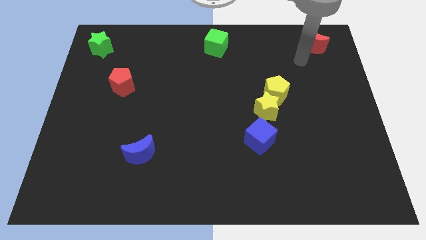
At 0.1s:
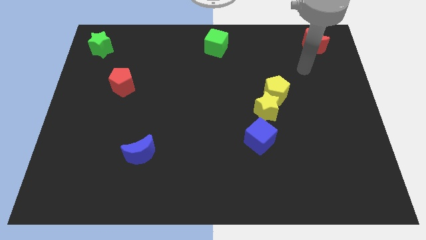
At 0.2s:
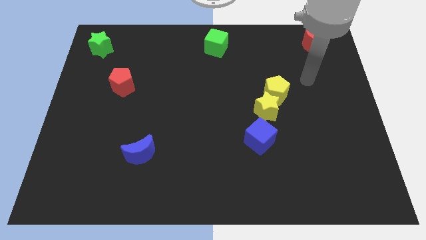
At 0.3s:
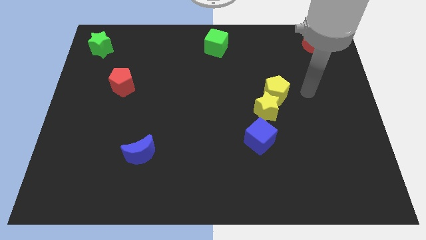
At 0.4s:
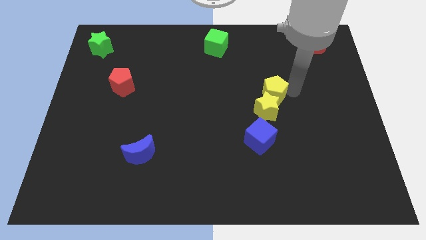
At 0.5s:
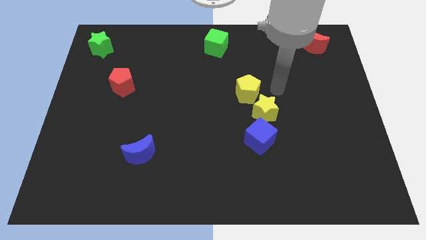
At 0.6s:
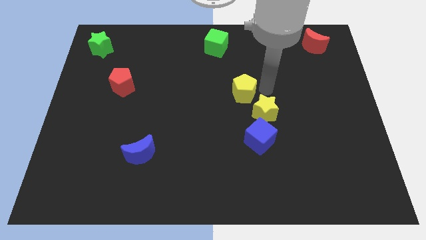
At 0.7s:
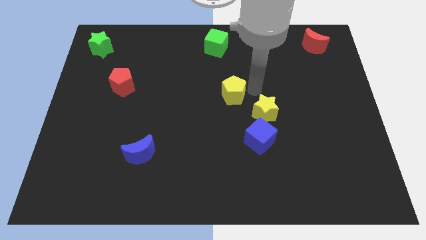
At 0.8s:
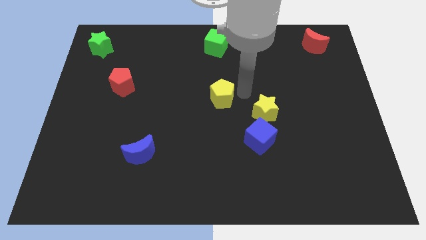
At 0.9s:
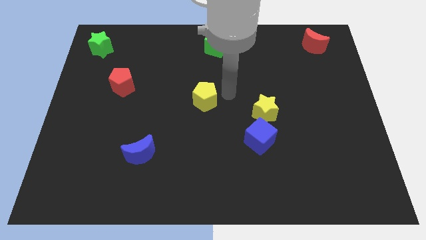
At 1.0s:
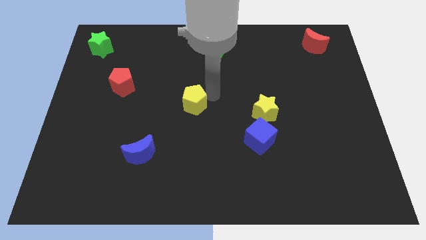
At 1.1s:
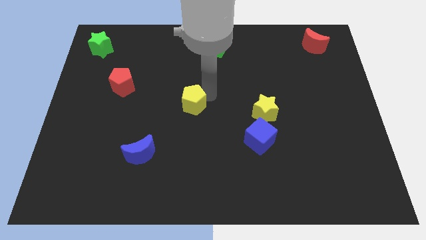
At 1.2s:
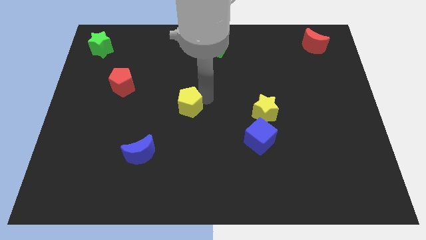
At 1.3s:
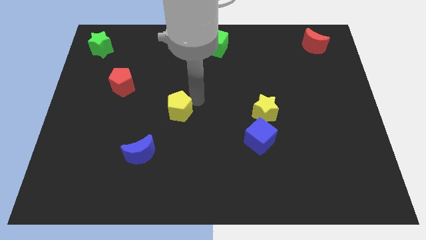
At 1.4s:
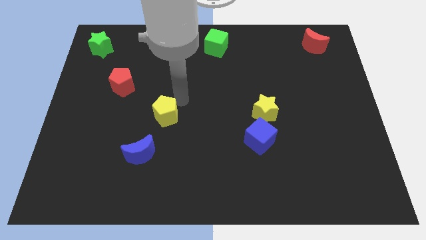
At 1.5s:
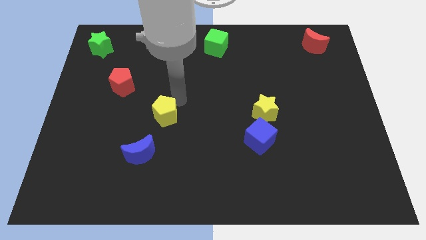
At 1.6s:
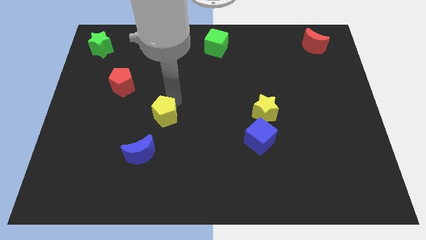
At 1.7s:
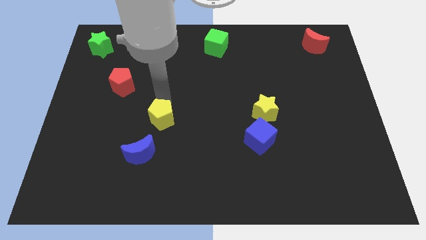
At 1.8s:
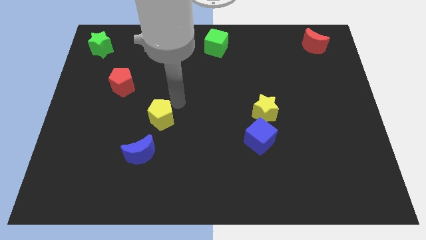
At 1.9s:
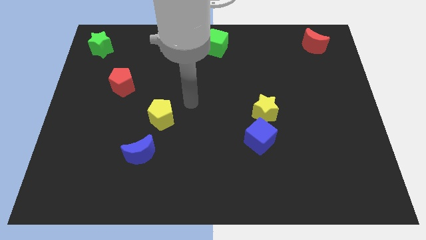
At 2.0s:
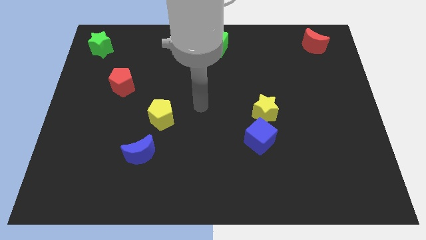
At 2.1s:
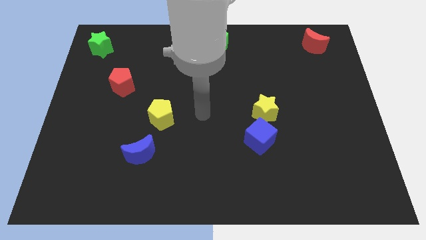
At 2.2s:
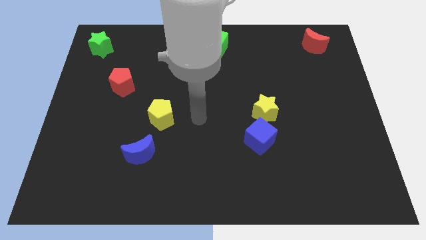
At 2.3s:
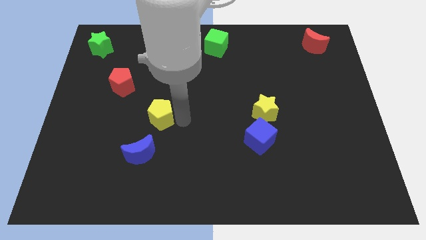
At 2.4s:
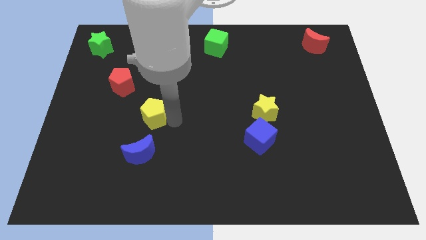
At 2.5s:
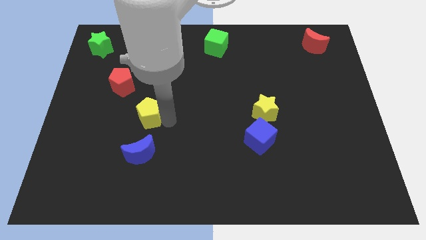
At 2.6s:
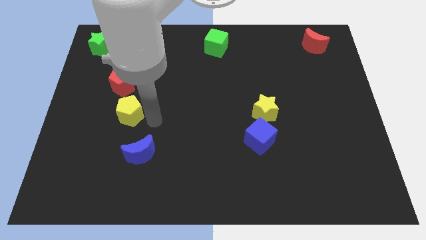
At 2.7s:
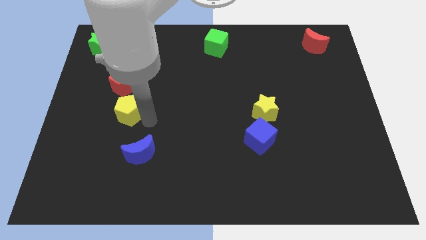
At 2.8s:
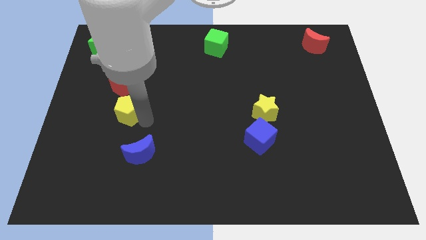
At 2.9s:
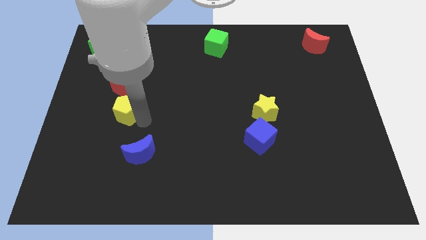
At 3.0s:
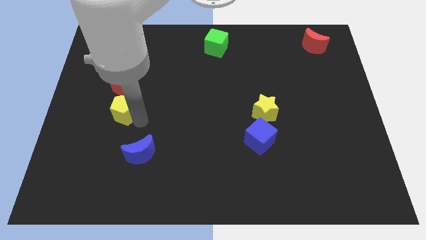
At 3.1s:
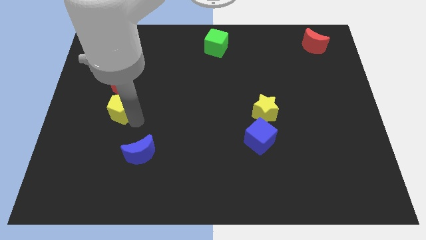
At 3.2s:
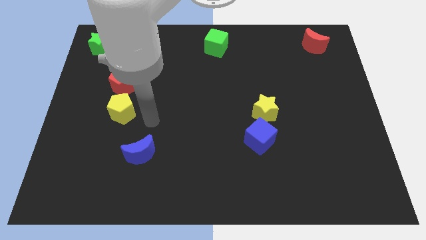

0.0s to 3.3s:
place the yellow pentagon at the bottom of red pentagon

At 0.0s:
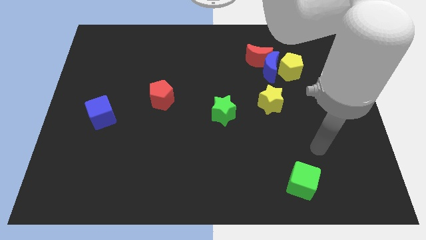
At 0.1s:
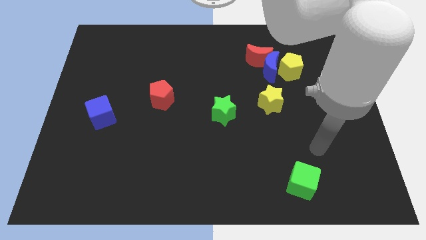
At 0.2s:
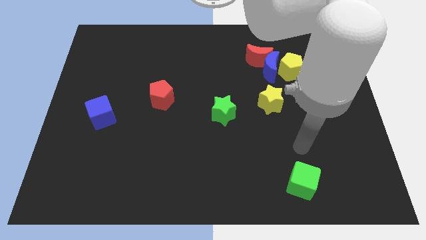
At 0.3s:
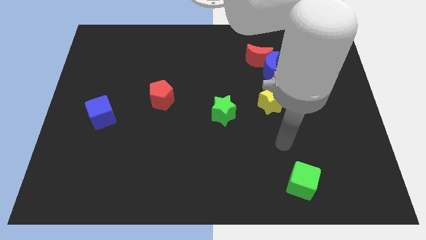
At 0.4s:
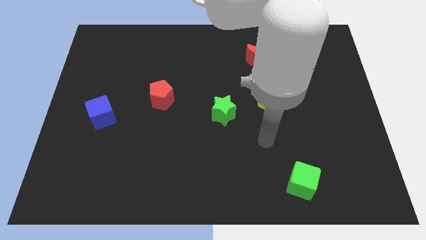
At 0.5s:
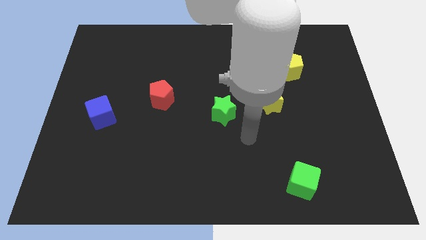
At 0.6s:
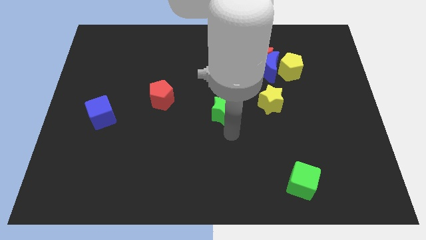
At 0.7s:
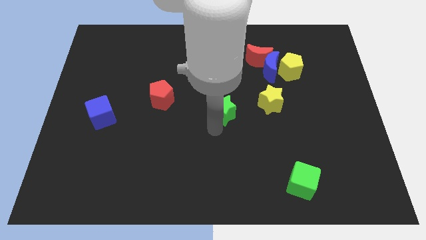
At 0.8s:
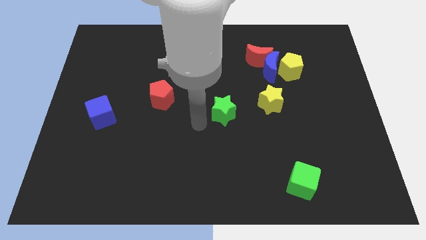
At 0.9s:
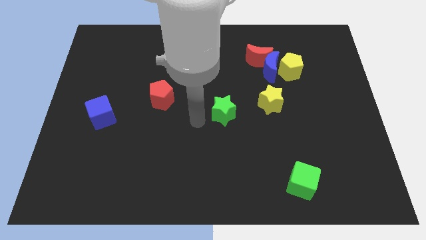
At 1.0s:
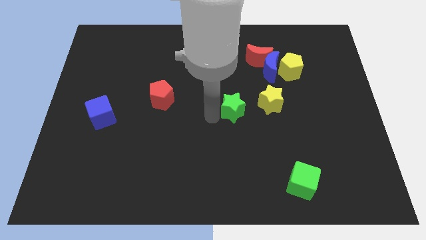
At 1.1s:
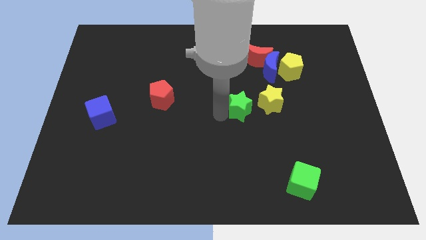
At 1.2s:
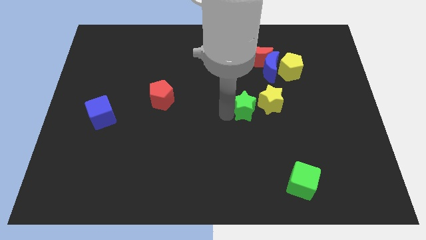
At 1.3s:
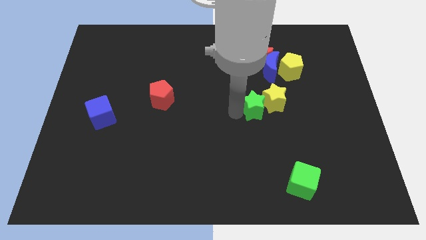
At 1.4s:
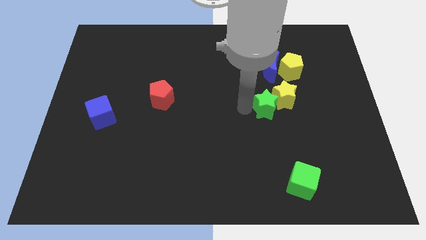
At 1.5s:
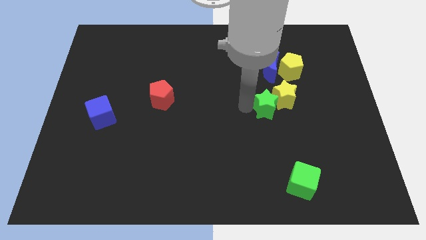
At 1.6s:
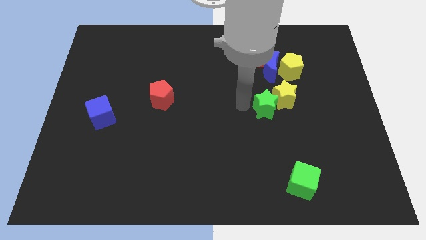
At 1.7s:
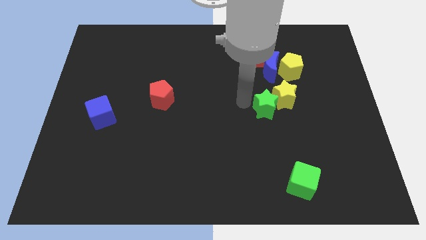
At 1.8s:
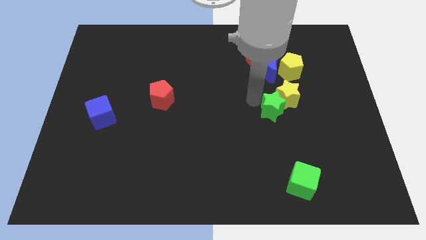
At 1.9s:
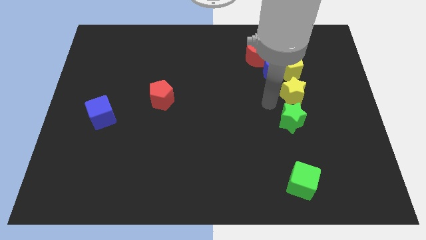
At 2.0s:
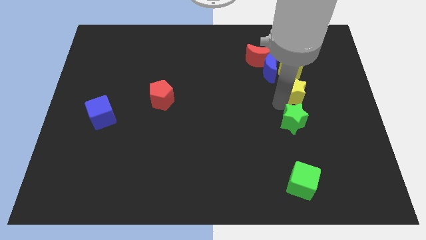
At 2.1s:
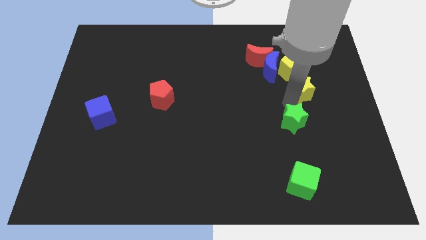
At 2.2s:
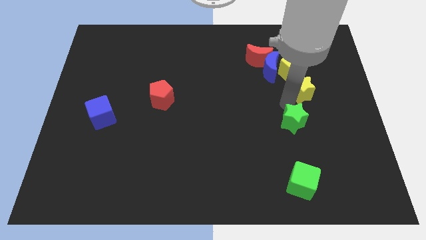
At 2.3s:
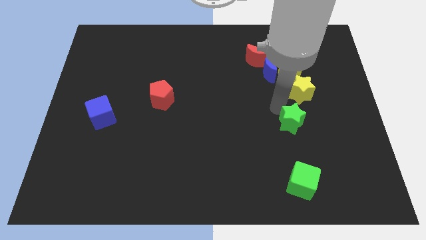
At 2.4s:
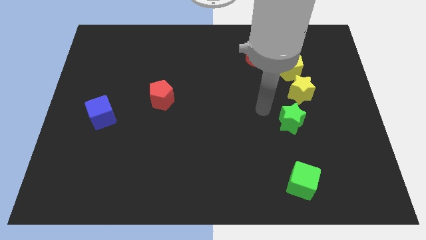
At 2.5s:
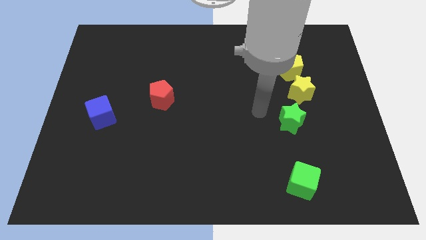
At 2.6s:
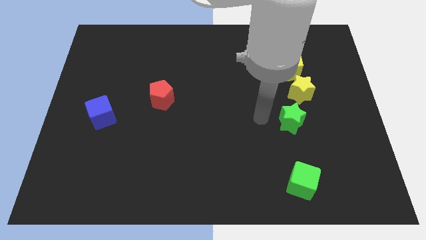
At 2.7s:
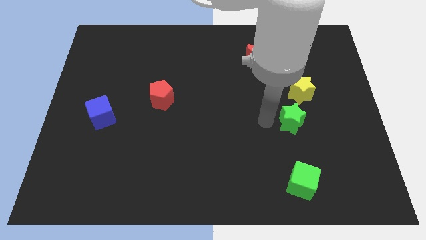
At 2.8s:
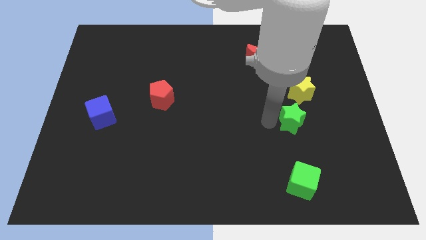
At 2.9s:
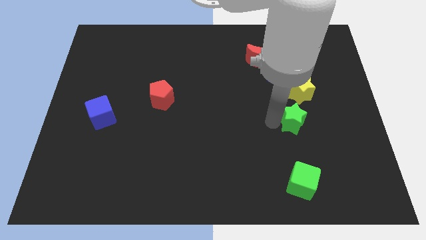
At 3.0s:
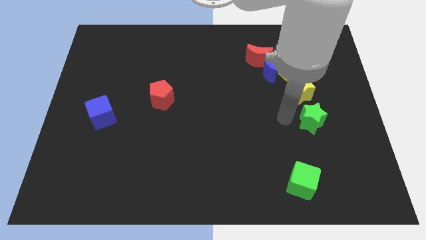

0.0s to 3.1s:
place the green star below the yellow star

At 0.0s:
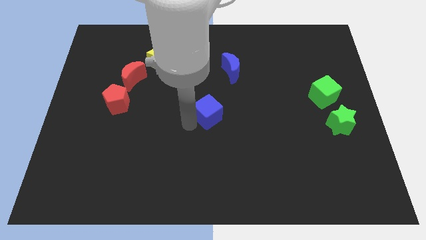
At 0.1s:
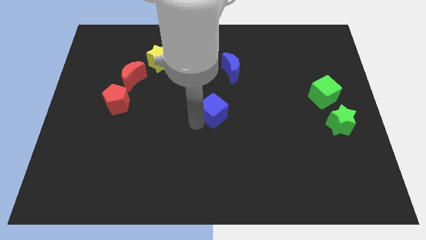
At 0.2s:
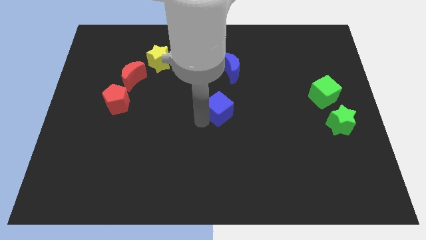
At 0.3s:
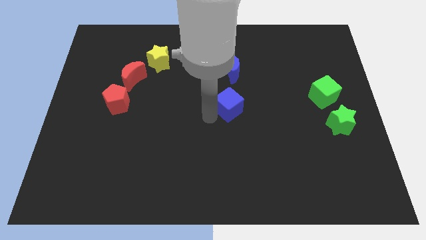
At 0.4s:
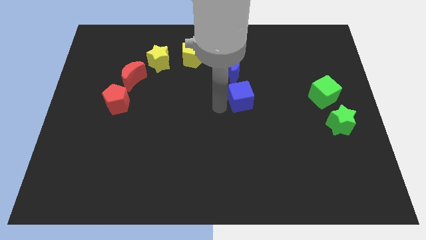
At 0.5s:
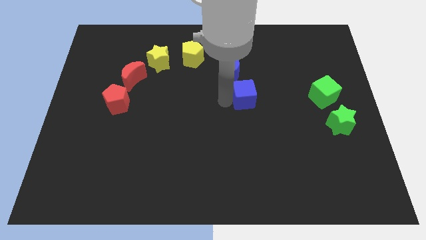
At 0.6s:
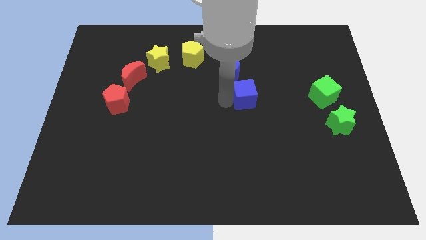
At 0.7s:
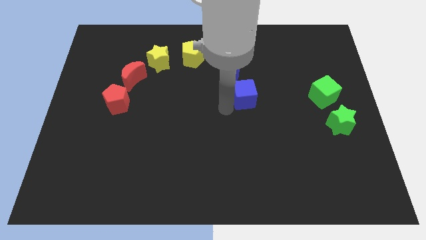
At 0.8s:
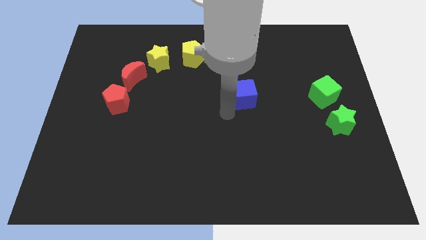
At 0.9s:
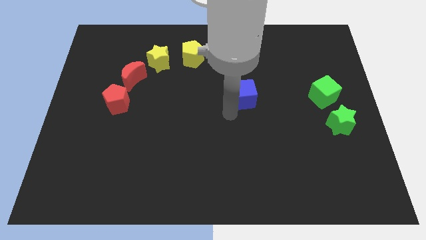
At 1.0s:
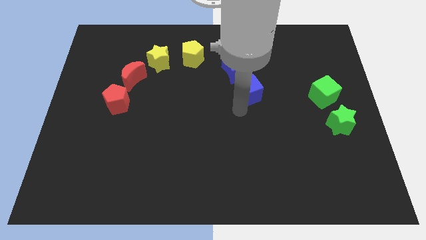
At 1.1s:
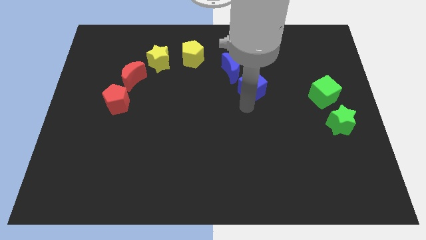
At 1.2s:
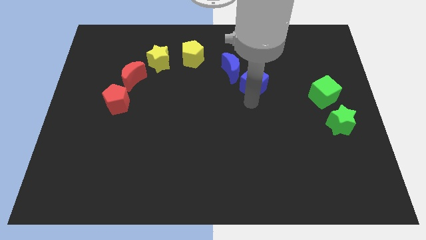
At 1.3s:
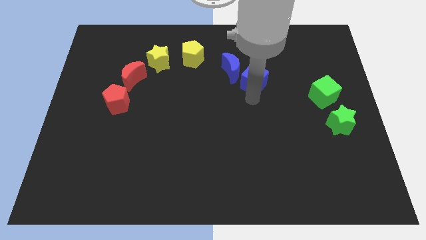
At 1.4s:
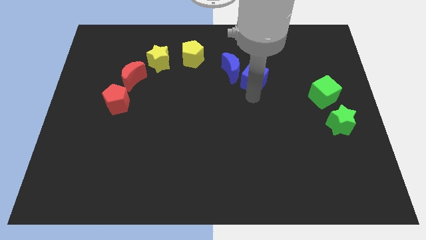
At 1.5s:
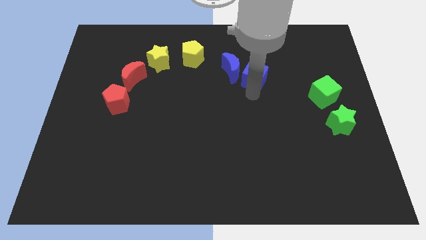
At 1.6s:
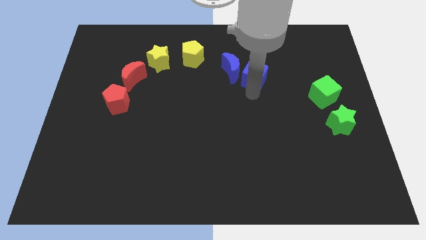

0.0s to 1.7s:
place the blue cube right to the blue crescent

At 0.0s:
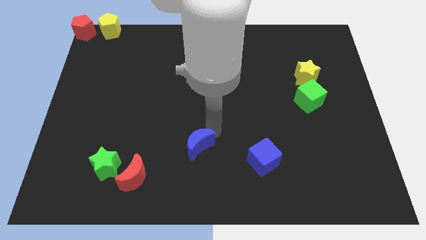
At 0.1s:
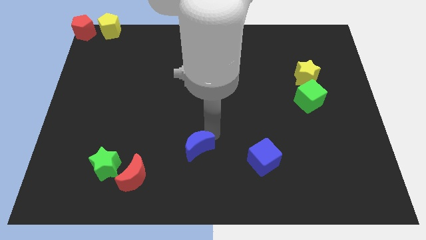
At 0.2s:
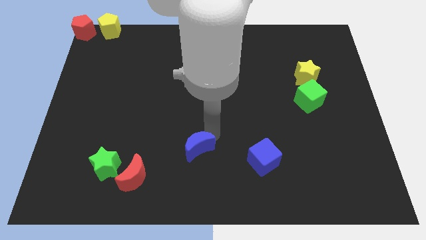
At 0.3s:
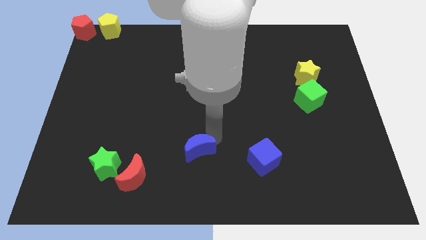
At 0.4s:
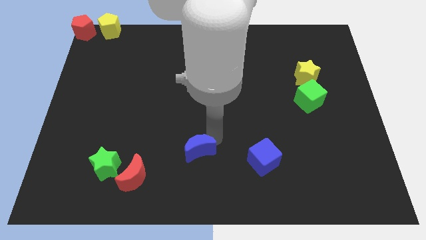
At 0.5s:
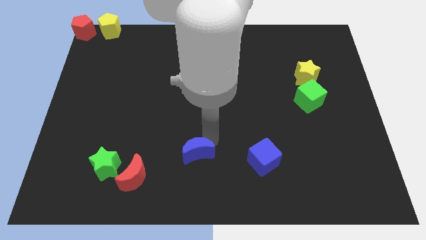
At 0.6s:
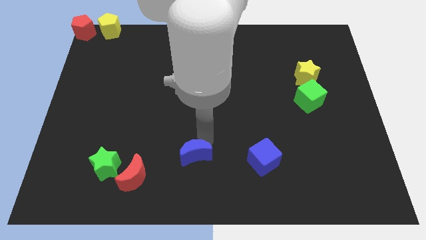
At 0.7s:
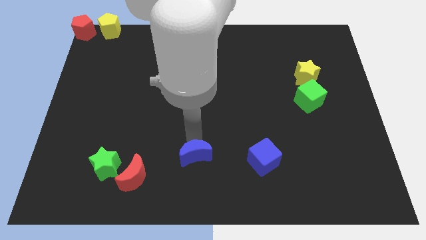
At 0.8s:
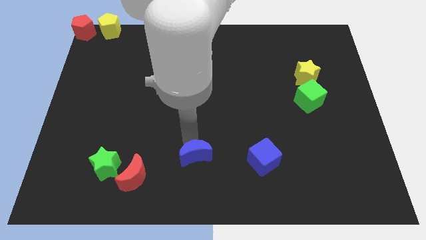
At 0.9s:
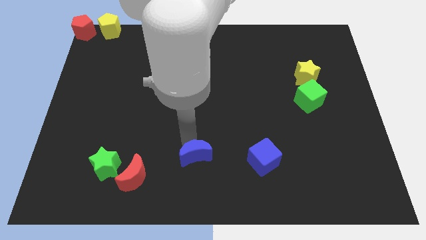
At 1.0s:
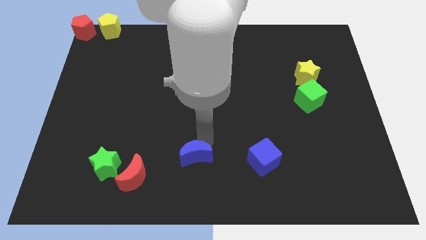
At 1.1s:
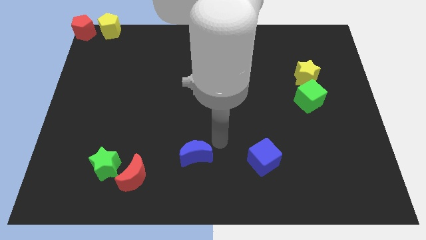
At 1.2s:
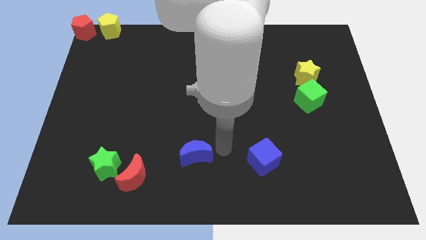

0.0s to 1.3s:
move the blue crescent slightly to the bottom
